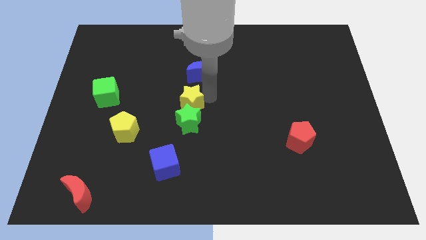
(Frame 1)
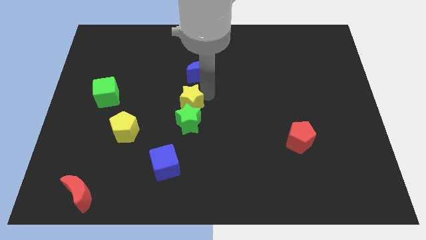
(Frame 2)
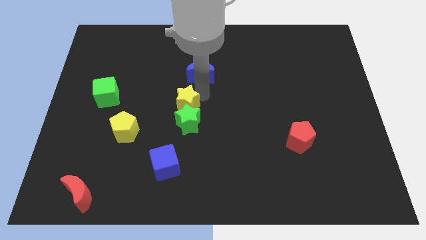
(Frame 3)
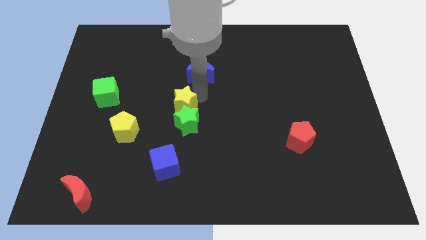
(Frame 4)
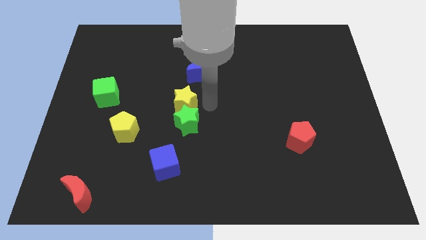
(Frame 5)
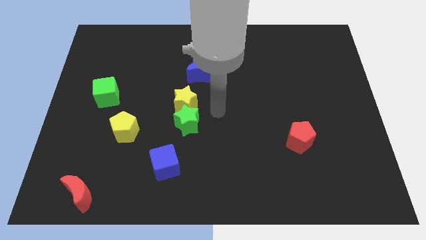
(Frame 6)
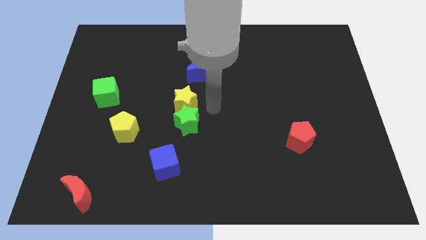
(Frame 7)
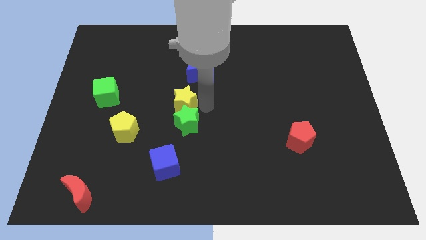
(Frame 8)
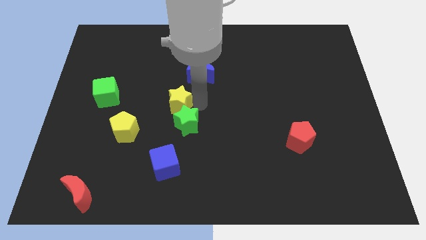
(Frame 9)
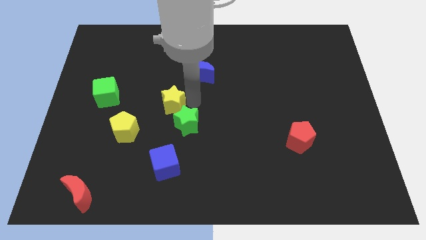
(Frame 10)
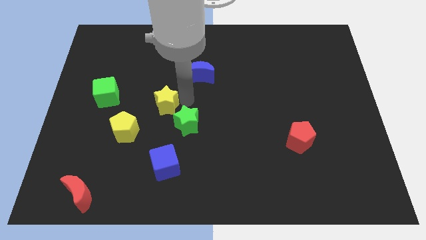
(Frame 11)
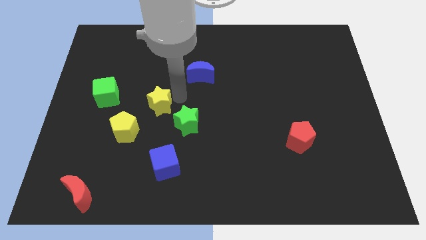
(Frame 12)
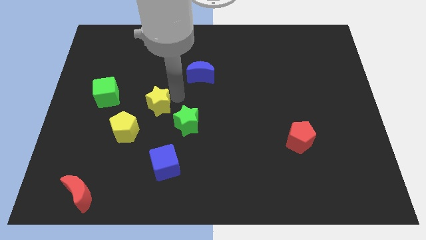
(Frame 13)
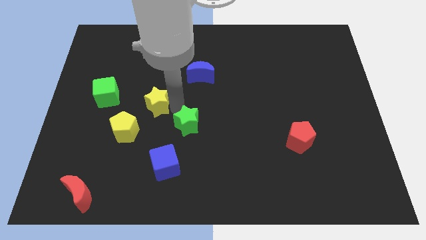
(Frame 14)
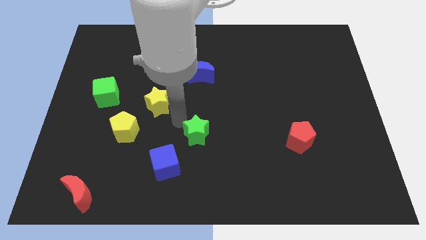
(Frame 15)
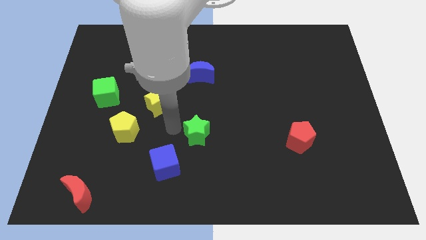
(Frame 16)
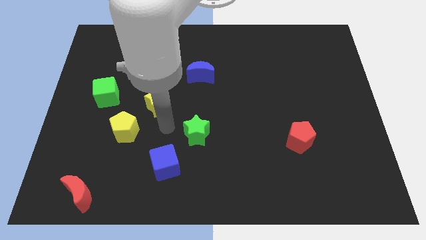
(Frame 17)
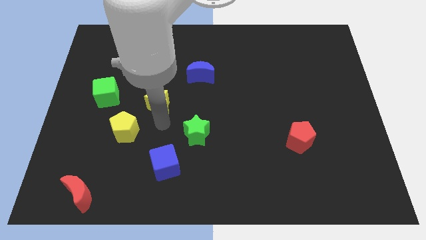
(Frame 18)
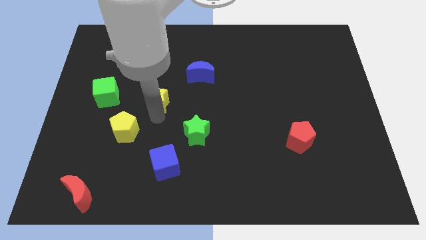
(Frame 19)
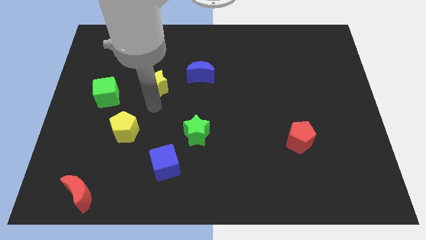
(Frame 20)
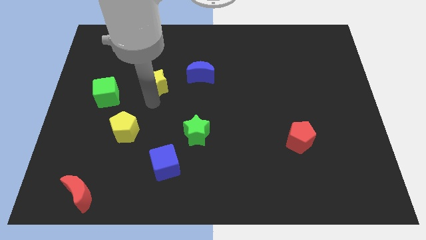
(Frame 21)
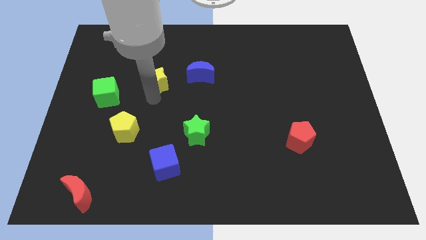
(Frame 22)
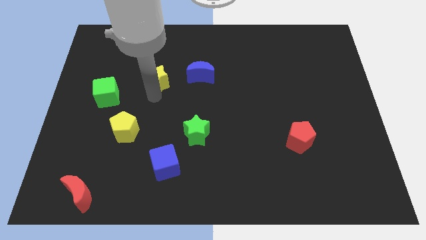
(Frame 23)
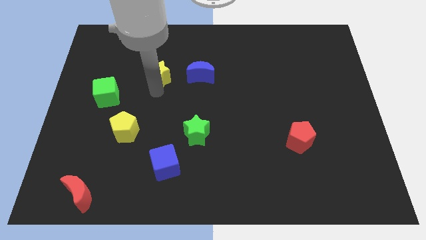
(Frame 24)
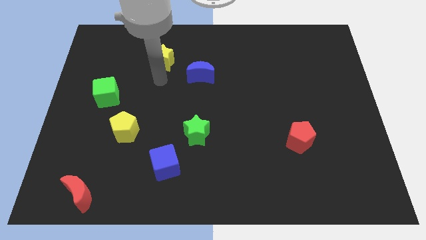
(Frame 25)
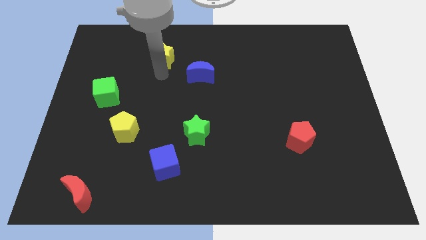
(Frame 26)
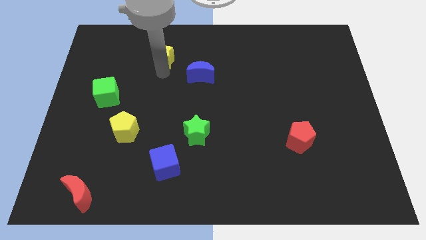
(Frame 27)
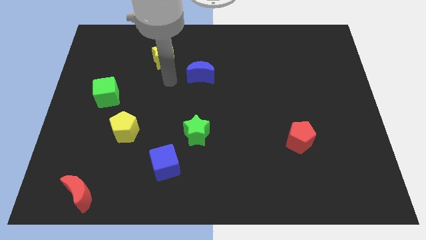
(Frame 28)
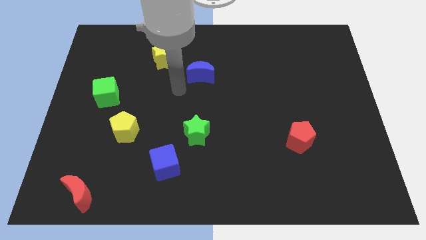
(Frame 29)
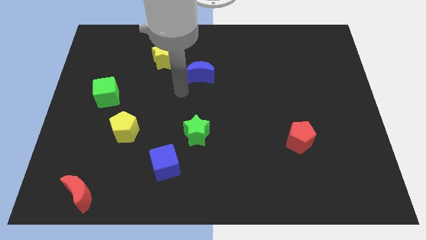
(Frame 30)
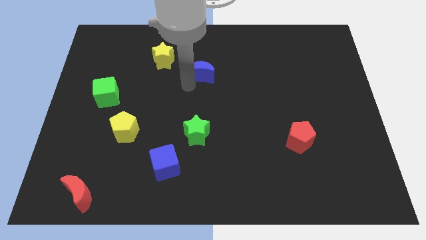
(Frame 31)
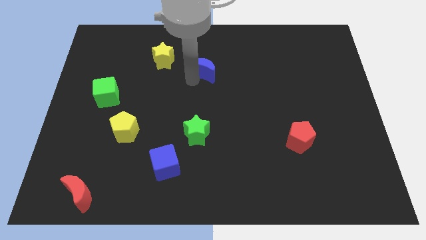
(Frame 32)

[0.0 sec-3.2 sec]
move the yellow star to the left side of the blue crescent

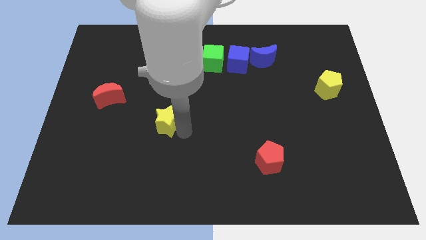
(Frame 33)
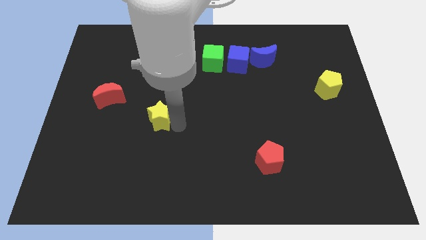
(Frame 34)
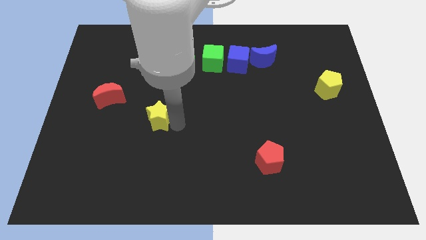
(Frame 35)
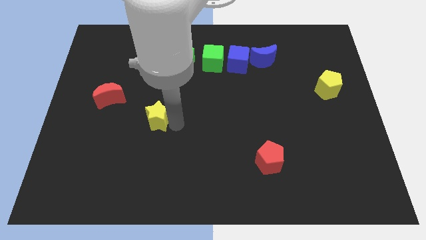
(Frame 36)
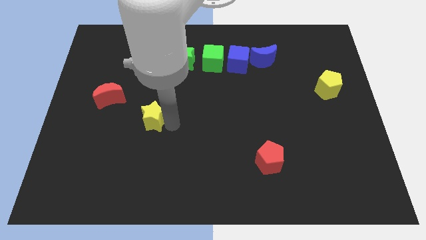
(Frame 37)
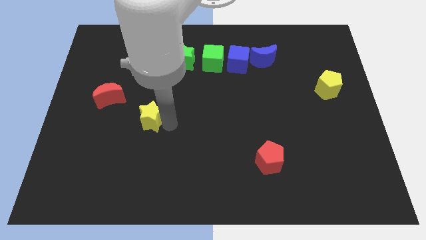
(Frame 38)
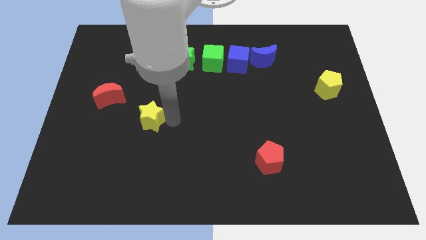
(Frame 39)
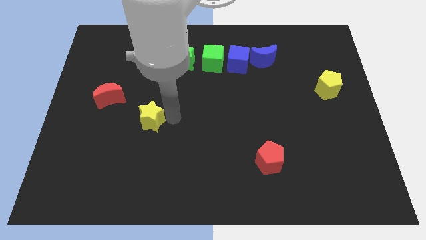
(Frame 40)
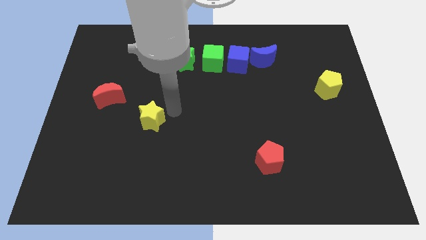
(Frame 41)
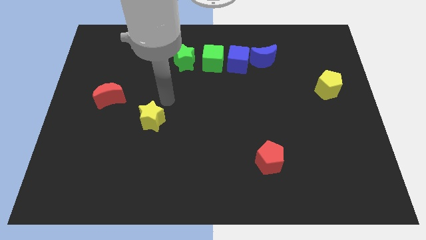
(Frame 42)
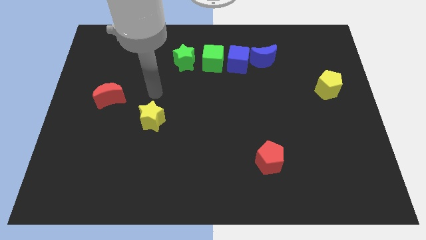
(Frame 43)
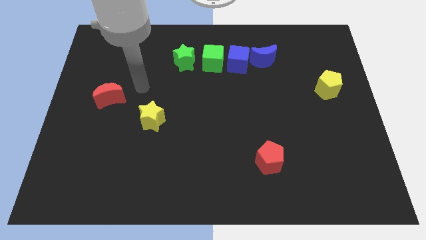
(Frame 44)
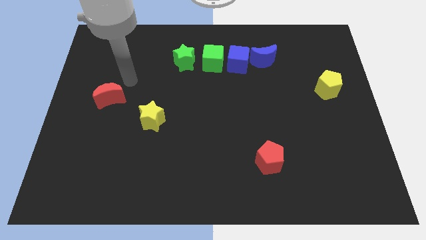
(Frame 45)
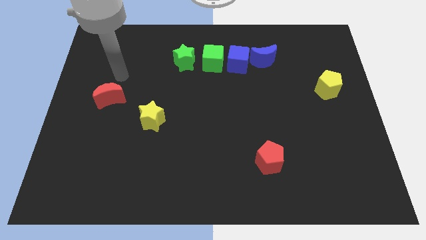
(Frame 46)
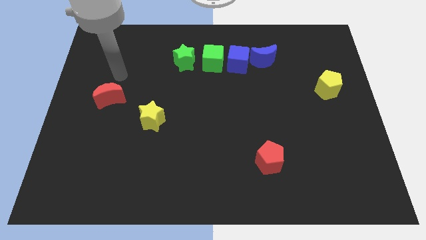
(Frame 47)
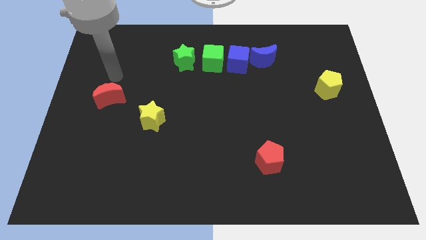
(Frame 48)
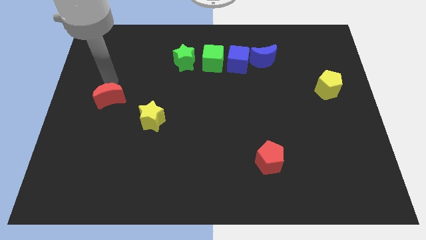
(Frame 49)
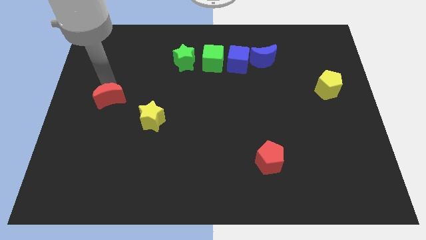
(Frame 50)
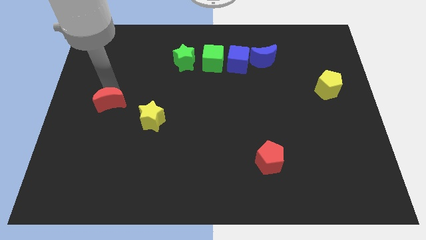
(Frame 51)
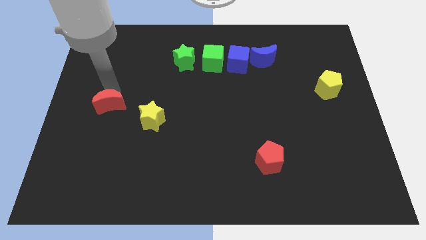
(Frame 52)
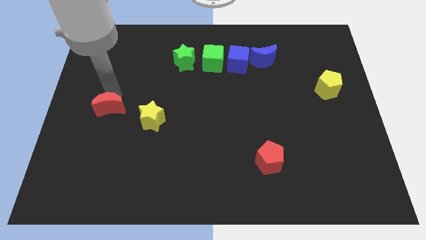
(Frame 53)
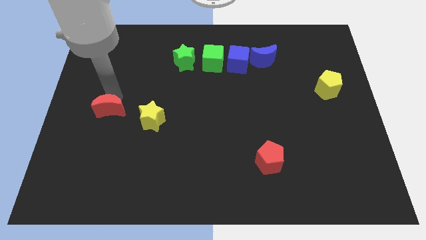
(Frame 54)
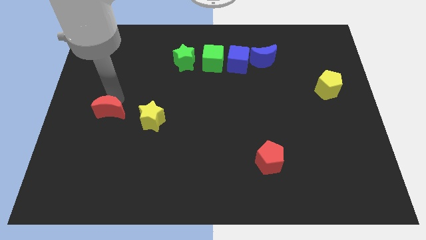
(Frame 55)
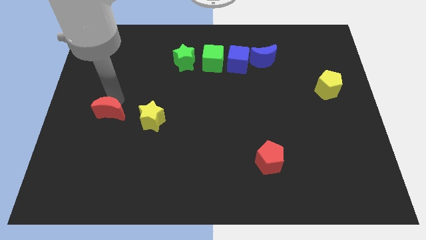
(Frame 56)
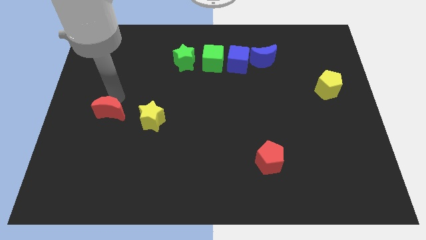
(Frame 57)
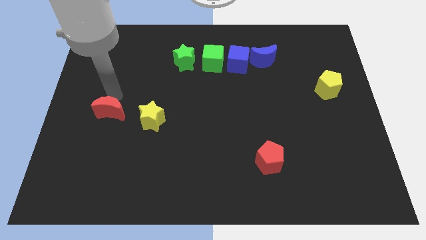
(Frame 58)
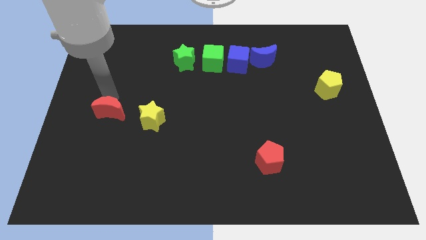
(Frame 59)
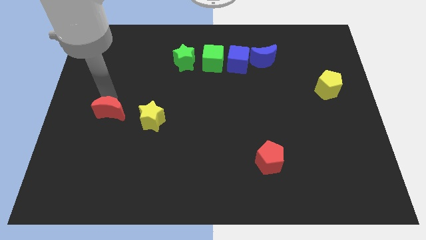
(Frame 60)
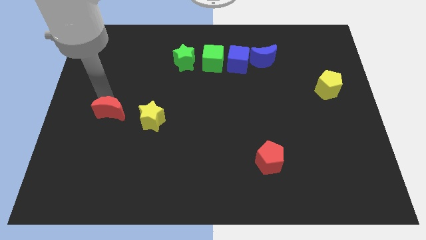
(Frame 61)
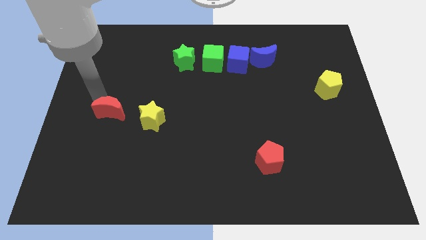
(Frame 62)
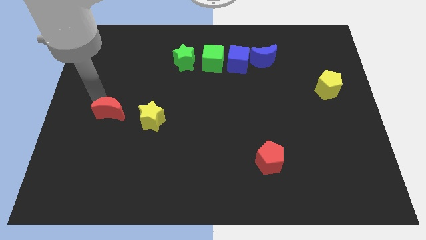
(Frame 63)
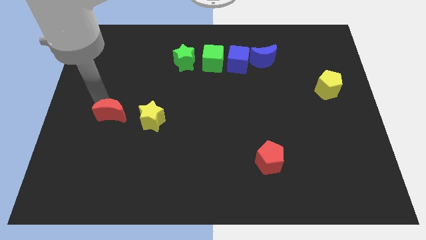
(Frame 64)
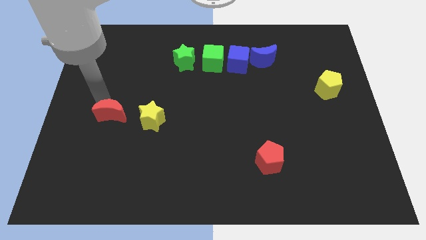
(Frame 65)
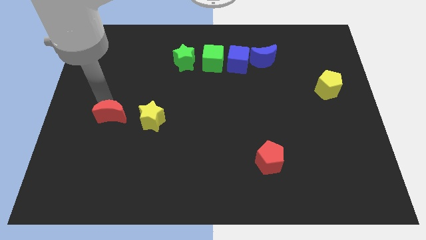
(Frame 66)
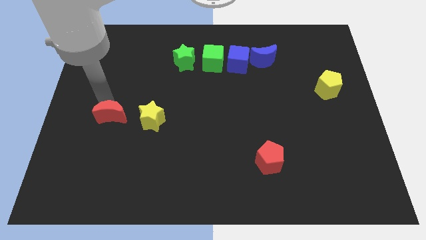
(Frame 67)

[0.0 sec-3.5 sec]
move red moon to the left of yellow star

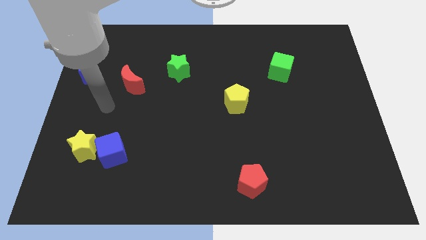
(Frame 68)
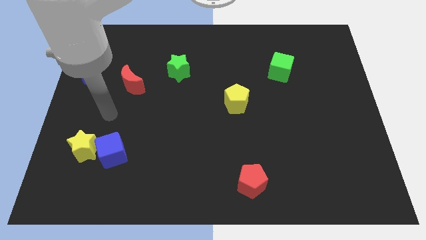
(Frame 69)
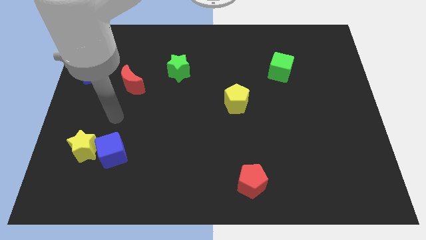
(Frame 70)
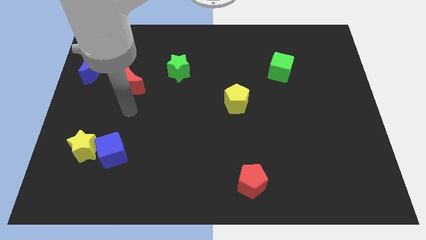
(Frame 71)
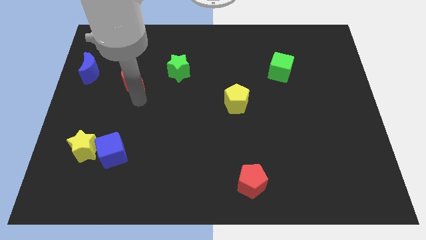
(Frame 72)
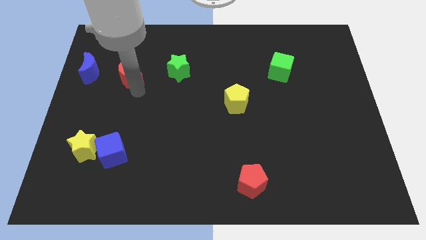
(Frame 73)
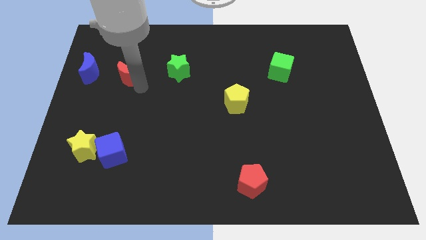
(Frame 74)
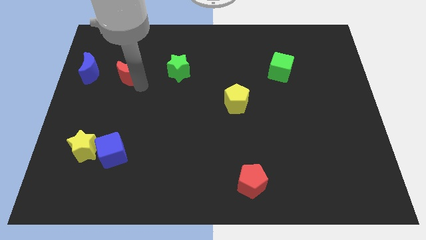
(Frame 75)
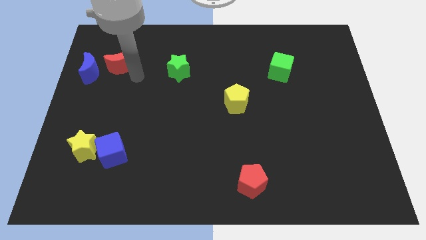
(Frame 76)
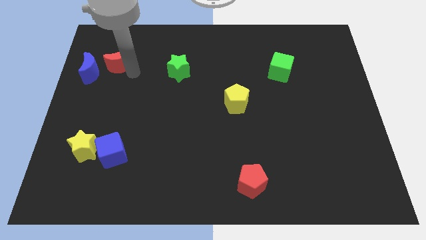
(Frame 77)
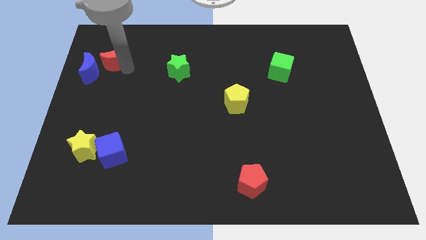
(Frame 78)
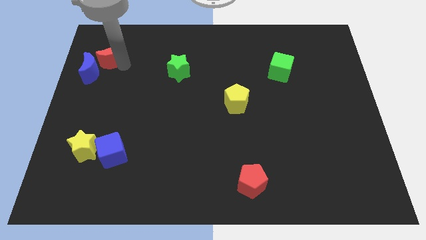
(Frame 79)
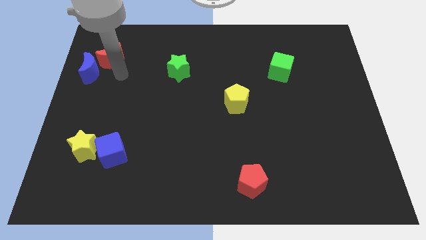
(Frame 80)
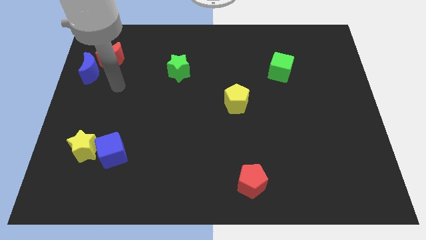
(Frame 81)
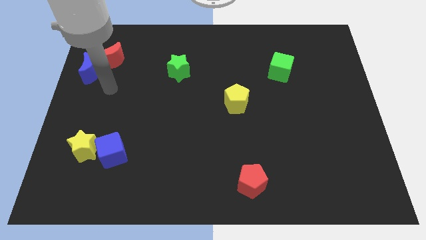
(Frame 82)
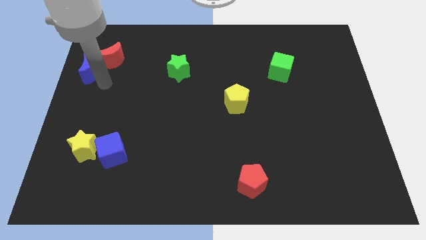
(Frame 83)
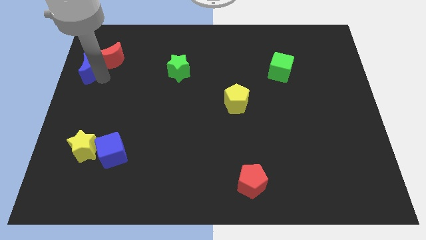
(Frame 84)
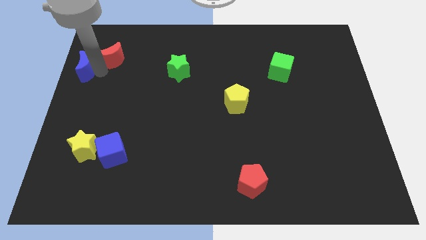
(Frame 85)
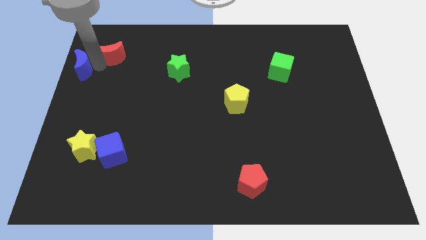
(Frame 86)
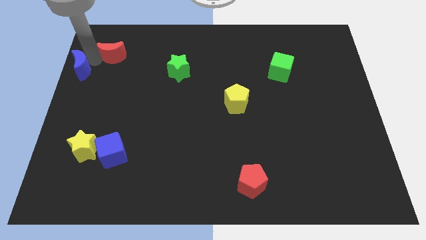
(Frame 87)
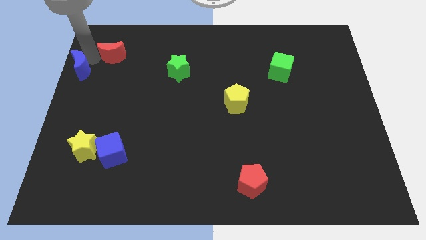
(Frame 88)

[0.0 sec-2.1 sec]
put your arm diagonally in between both the crescent

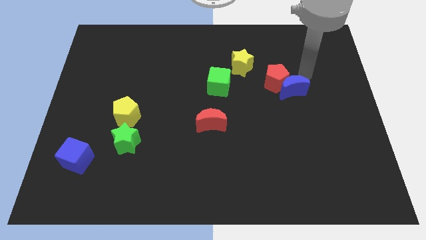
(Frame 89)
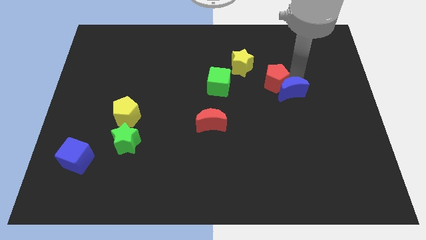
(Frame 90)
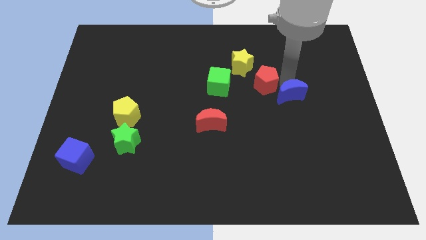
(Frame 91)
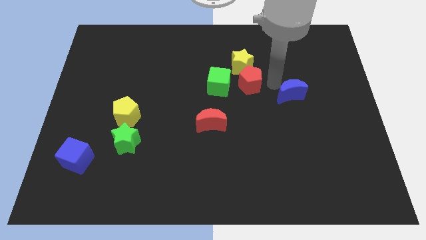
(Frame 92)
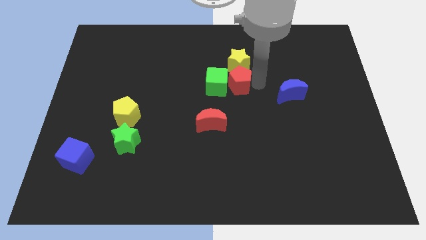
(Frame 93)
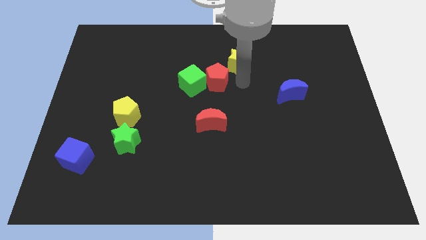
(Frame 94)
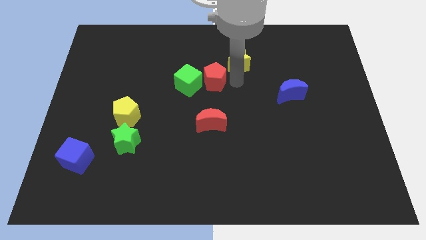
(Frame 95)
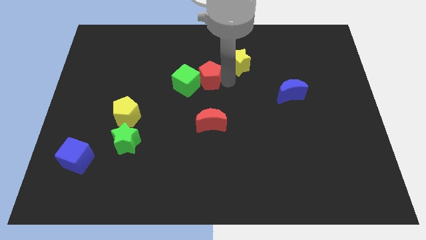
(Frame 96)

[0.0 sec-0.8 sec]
push the red pentagon into the green cube
